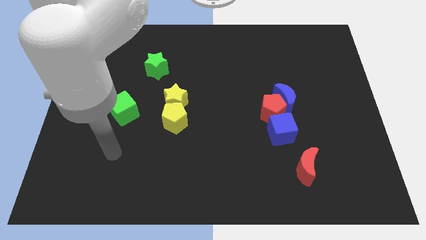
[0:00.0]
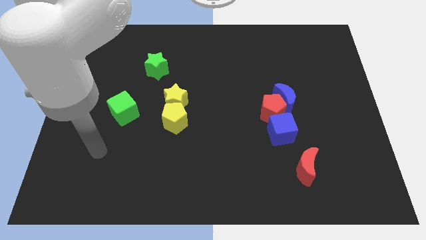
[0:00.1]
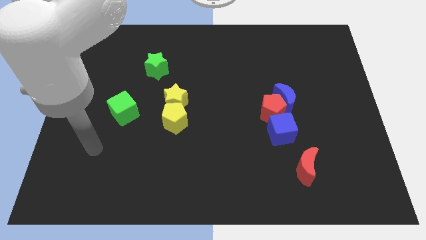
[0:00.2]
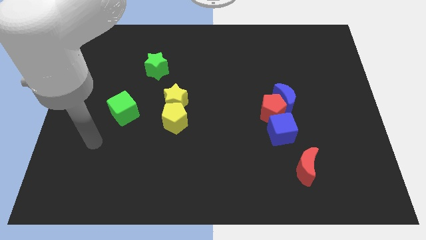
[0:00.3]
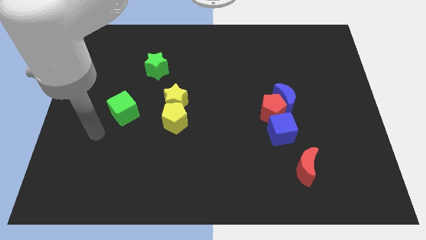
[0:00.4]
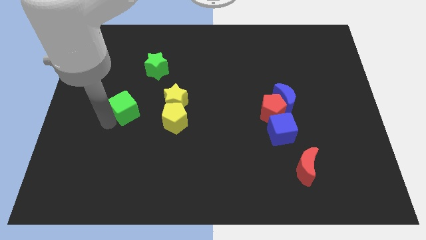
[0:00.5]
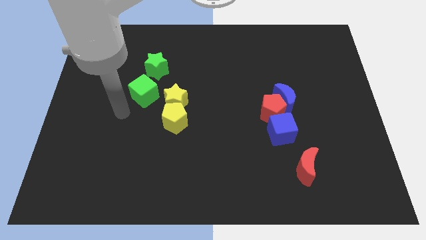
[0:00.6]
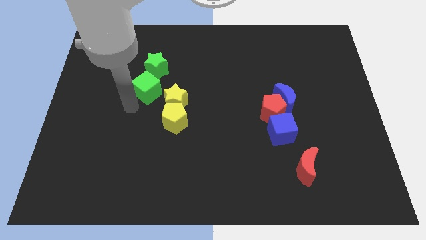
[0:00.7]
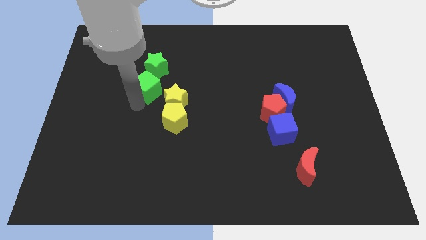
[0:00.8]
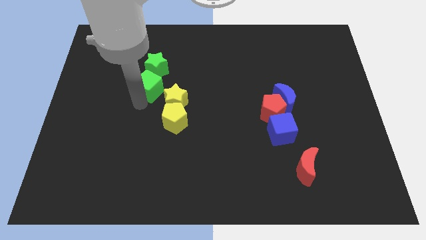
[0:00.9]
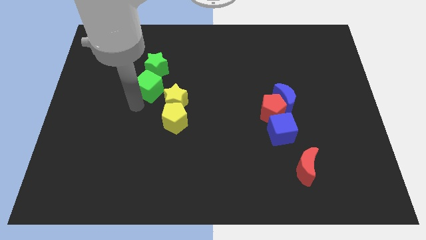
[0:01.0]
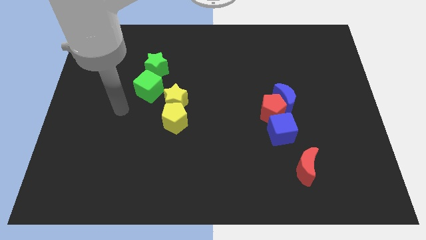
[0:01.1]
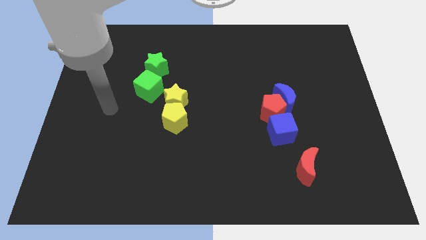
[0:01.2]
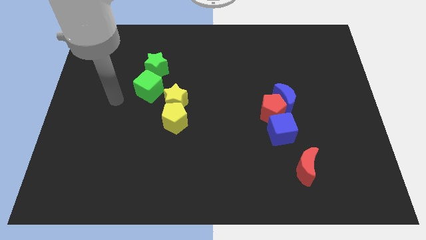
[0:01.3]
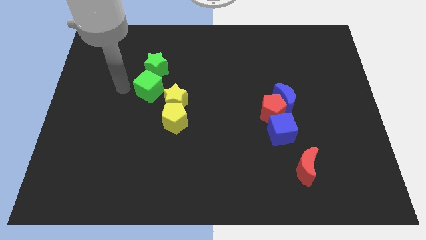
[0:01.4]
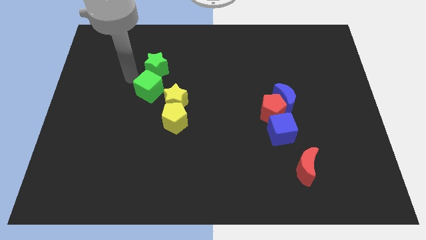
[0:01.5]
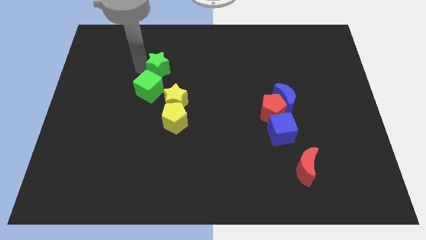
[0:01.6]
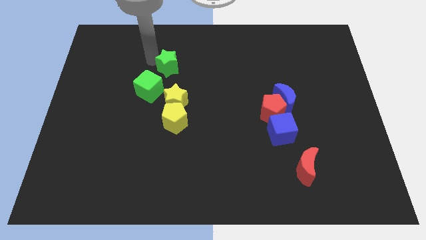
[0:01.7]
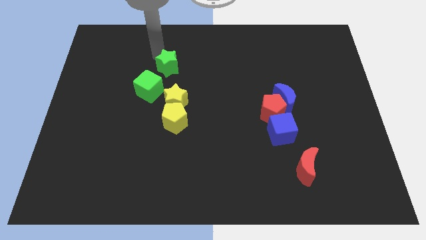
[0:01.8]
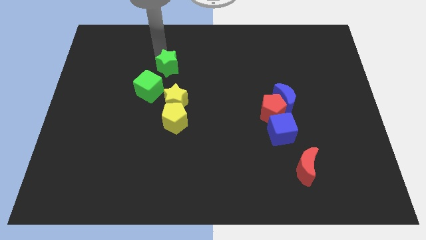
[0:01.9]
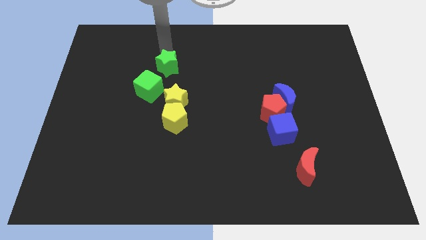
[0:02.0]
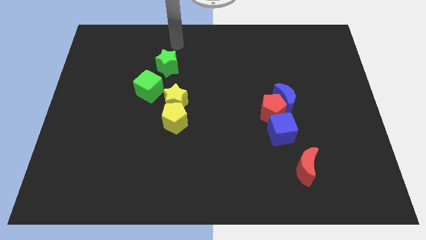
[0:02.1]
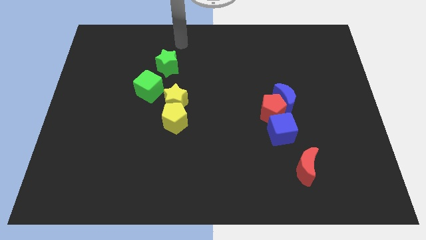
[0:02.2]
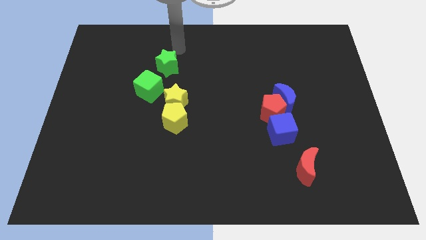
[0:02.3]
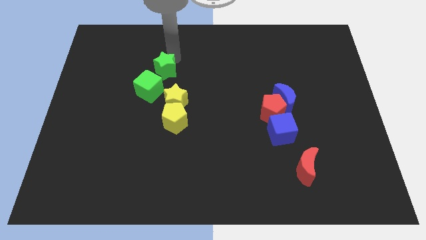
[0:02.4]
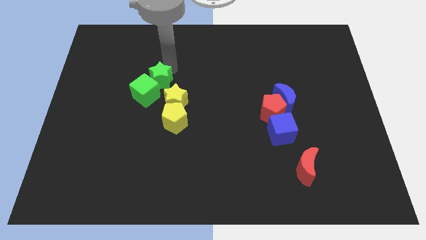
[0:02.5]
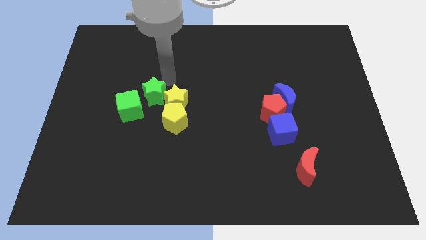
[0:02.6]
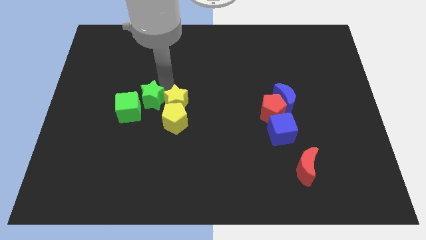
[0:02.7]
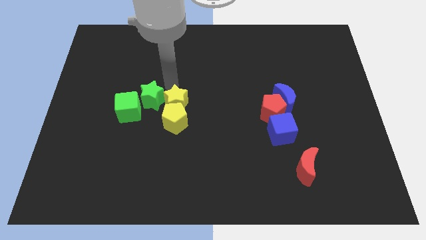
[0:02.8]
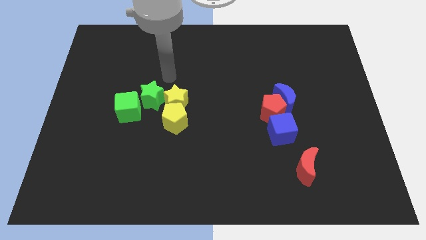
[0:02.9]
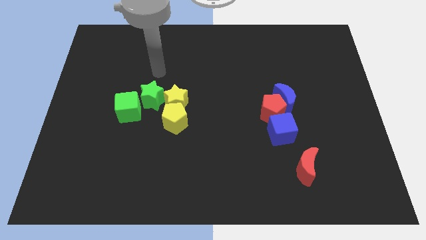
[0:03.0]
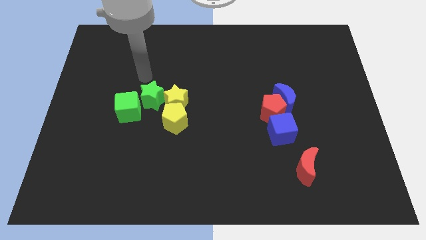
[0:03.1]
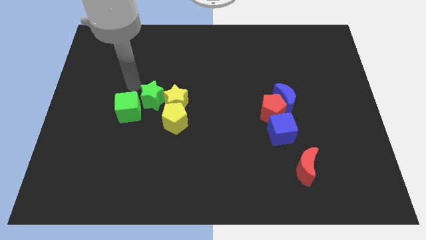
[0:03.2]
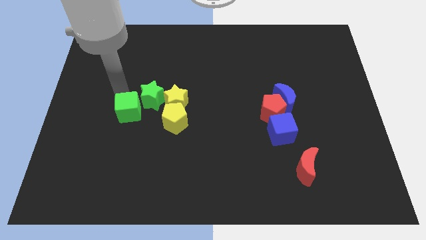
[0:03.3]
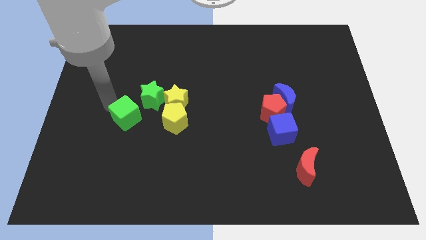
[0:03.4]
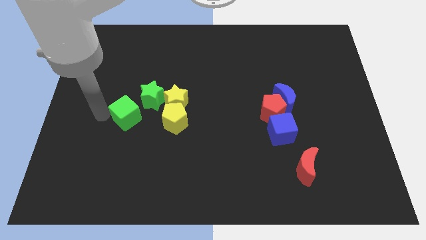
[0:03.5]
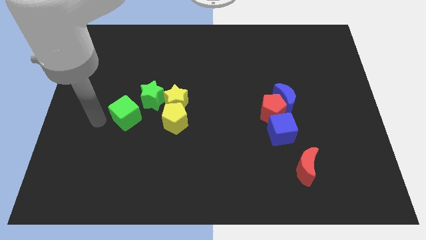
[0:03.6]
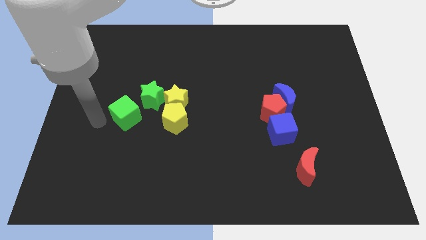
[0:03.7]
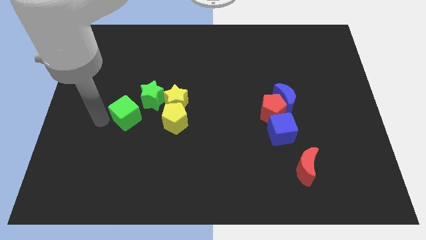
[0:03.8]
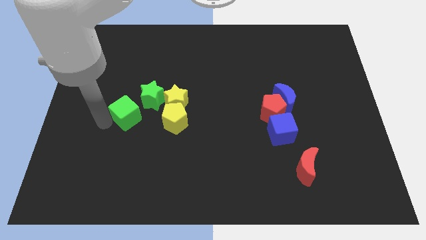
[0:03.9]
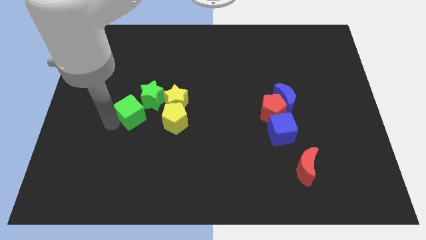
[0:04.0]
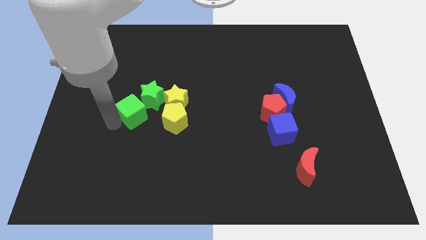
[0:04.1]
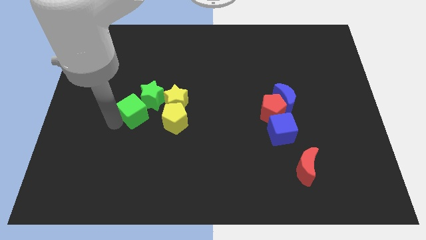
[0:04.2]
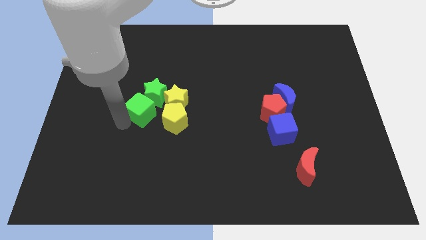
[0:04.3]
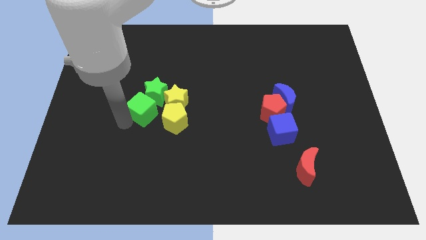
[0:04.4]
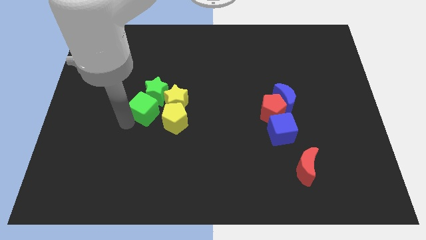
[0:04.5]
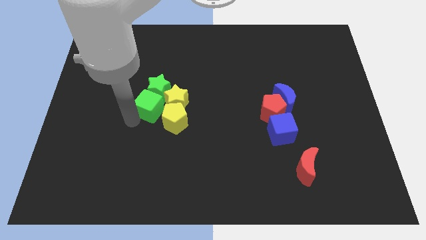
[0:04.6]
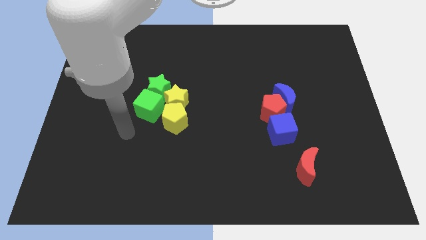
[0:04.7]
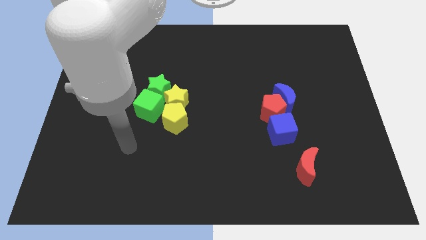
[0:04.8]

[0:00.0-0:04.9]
place the green cube below the green star

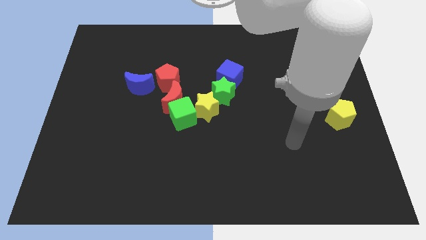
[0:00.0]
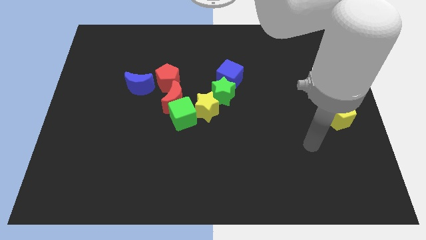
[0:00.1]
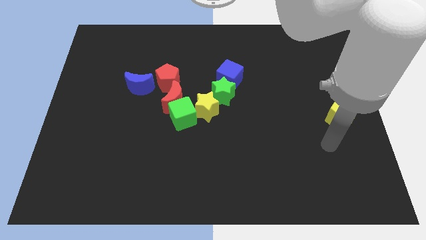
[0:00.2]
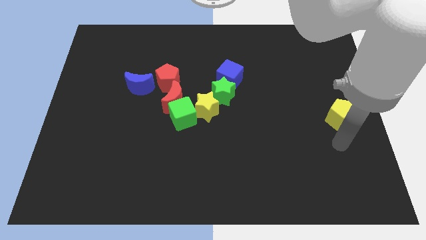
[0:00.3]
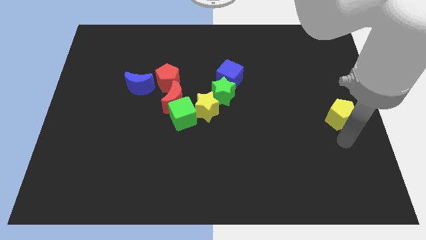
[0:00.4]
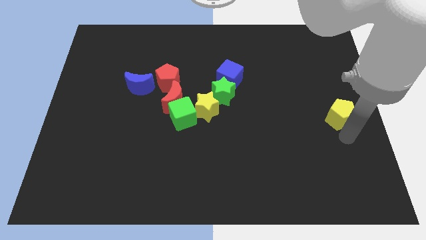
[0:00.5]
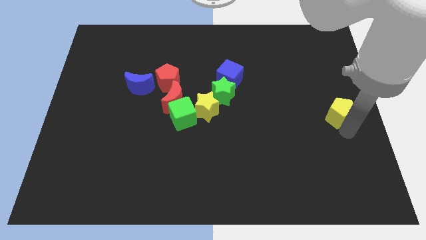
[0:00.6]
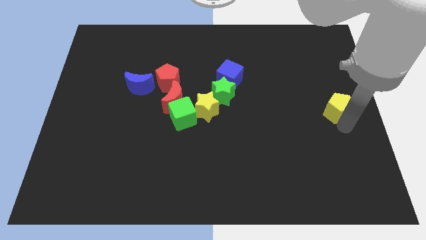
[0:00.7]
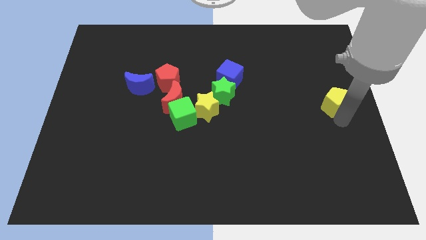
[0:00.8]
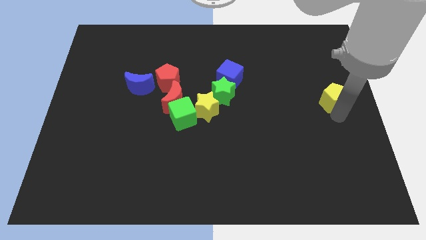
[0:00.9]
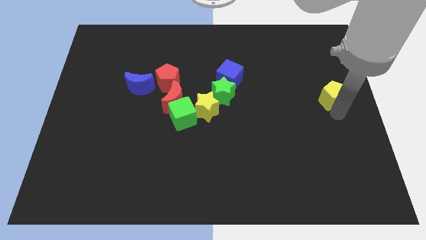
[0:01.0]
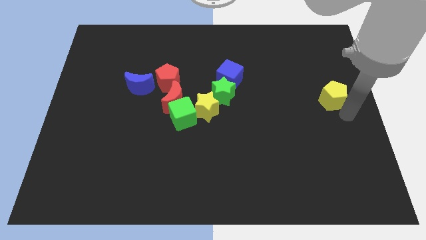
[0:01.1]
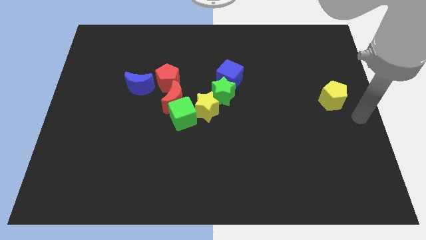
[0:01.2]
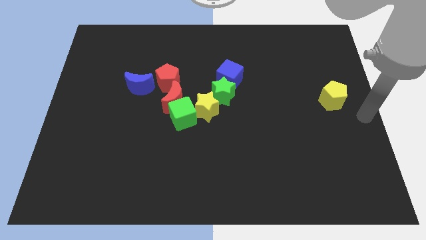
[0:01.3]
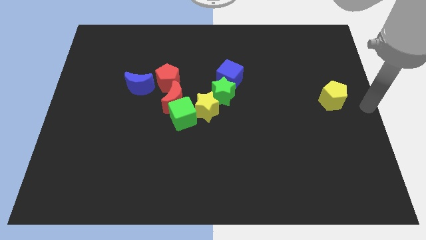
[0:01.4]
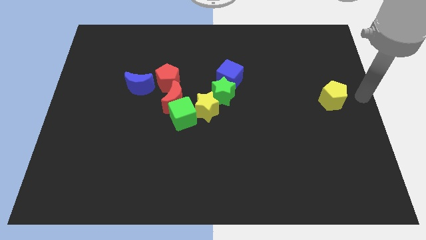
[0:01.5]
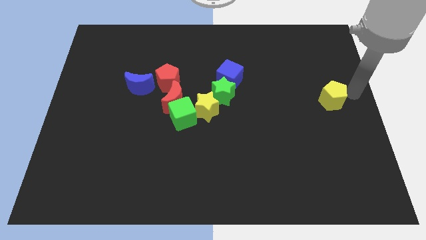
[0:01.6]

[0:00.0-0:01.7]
move the yellow pentagon slightly up

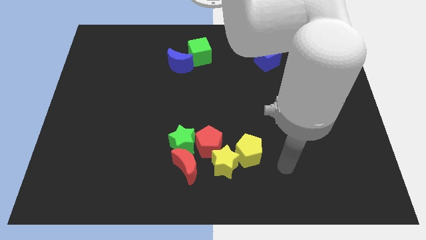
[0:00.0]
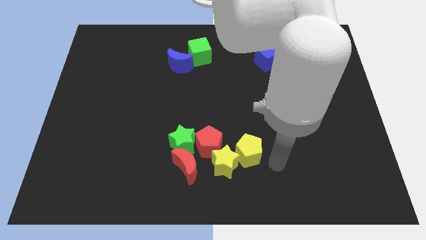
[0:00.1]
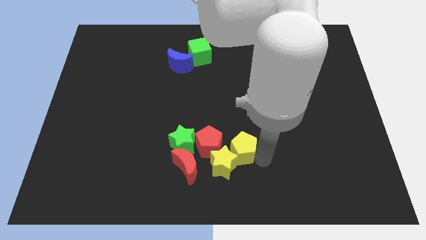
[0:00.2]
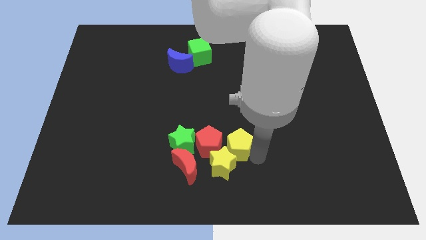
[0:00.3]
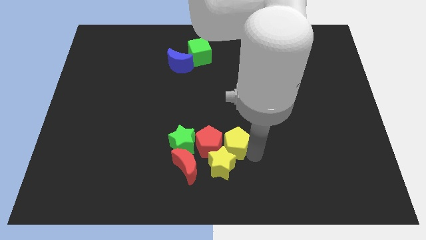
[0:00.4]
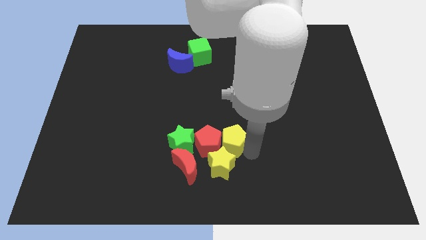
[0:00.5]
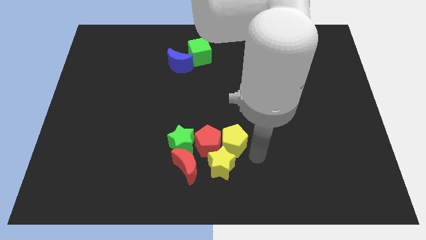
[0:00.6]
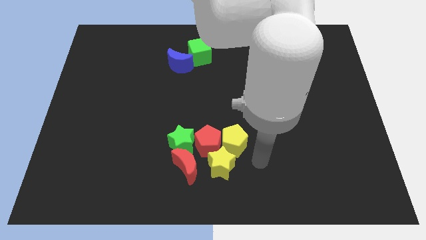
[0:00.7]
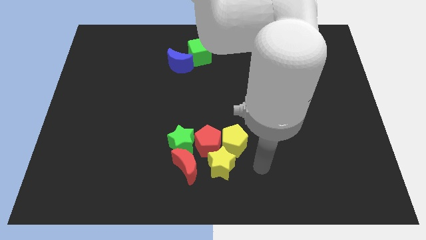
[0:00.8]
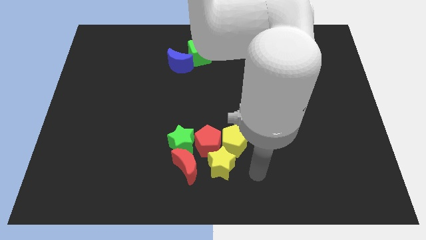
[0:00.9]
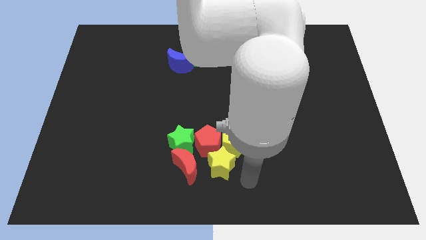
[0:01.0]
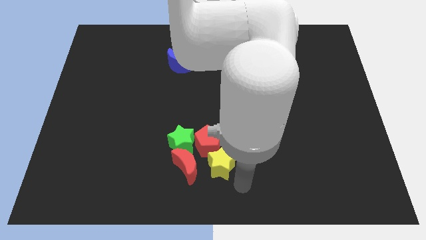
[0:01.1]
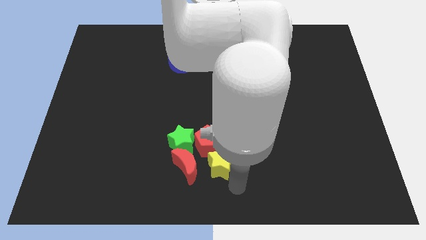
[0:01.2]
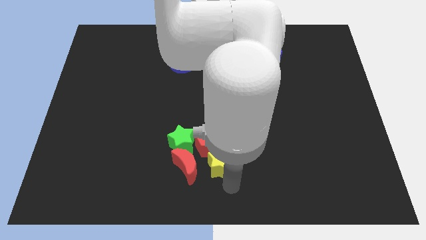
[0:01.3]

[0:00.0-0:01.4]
place yellow pentagon to the top of yellow star

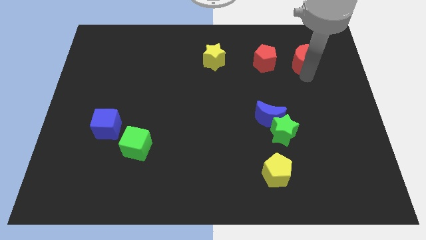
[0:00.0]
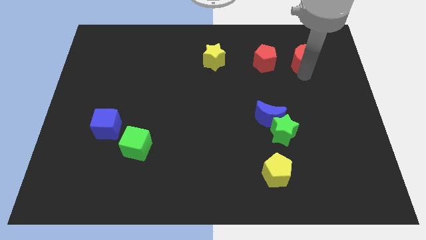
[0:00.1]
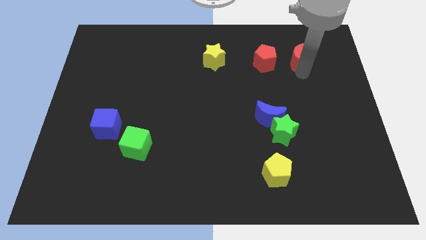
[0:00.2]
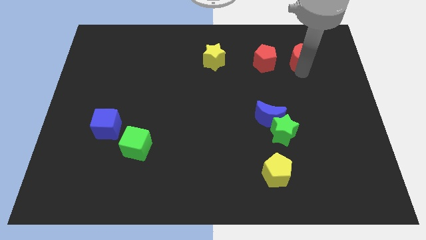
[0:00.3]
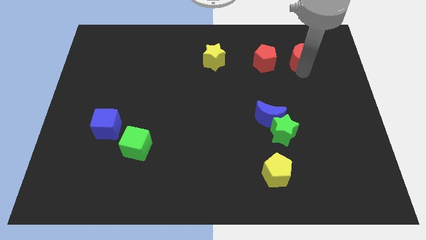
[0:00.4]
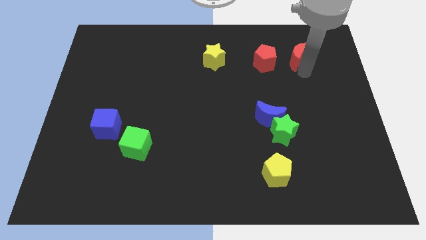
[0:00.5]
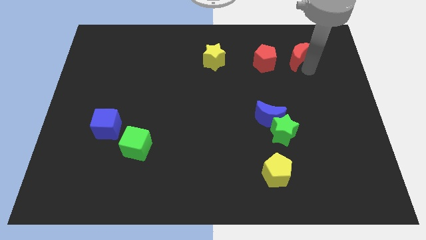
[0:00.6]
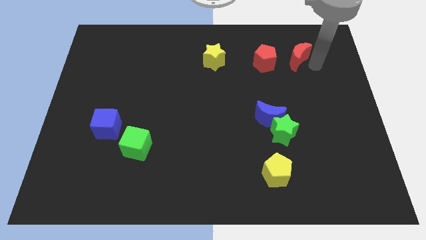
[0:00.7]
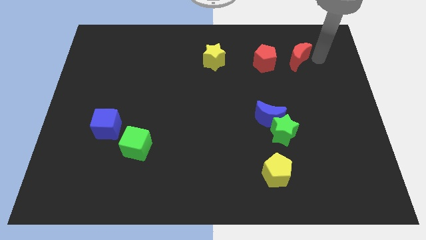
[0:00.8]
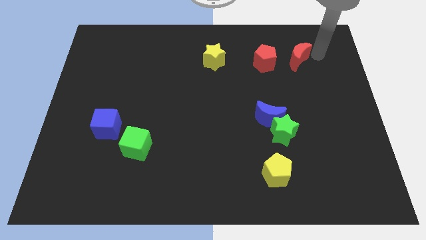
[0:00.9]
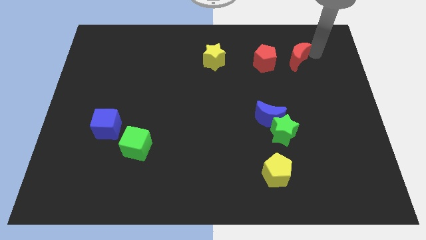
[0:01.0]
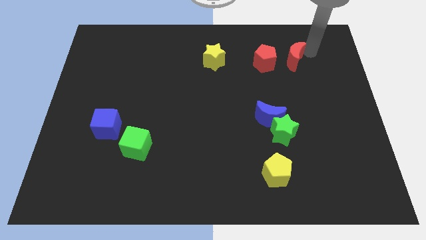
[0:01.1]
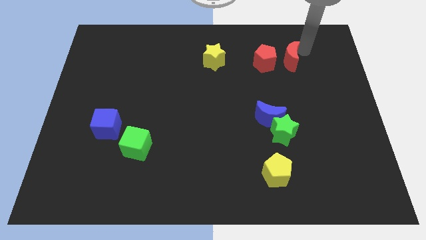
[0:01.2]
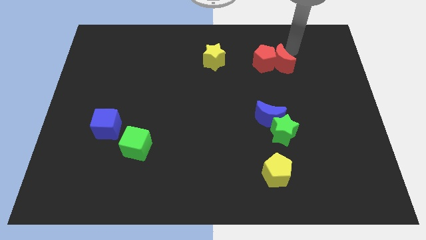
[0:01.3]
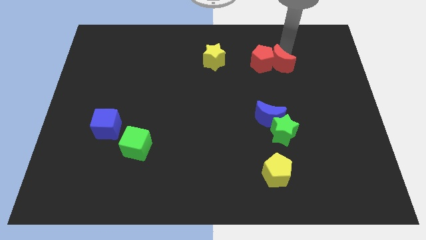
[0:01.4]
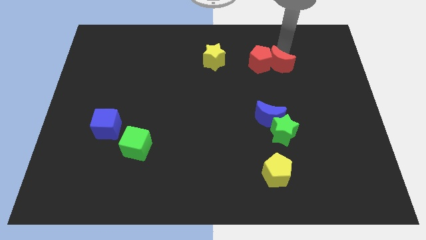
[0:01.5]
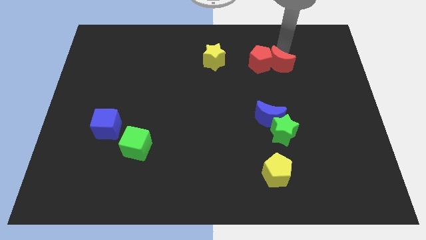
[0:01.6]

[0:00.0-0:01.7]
push the red moon into the red pentagon
